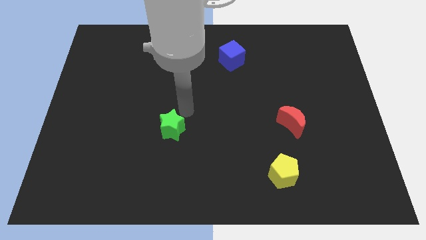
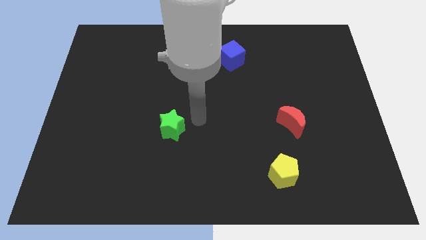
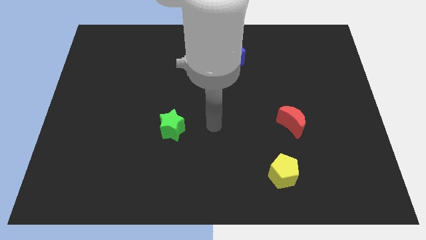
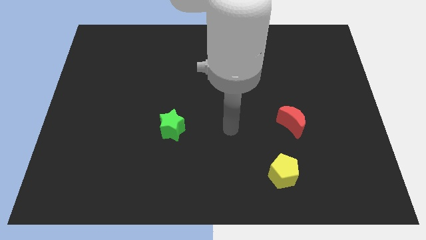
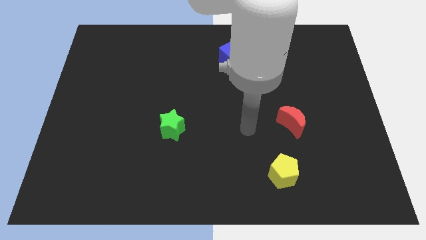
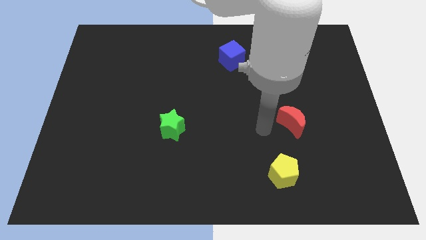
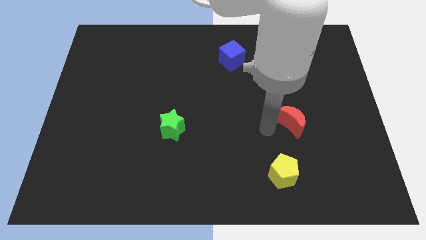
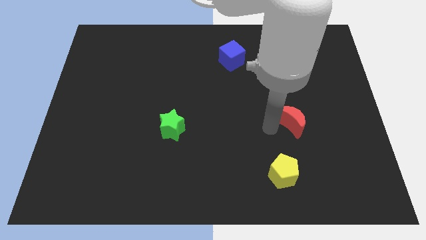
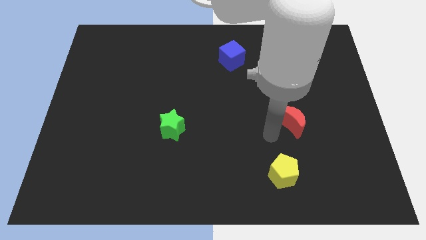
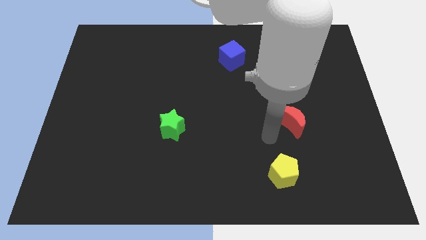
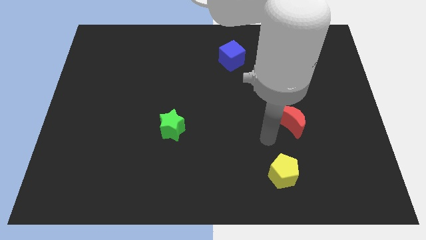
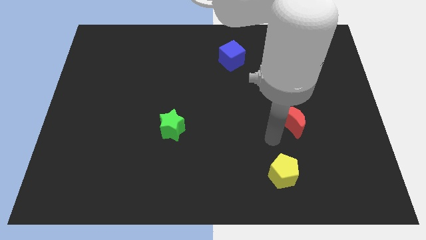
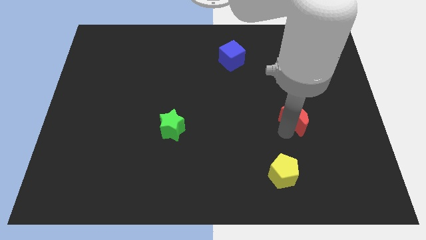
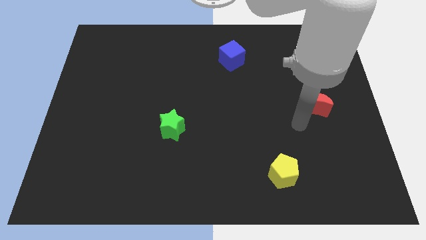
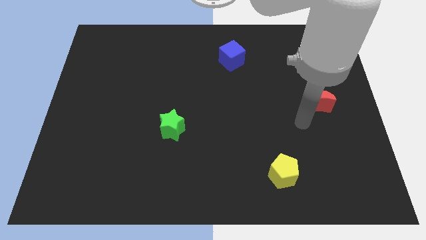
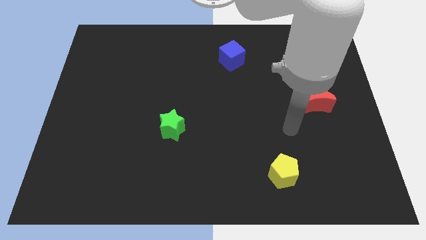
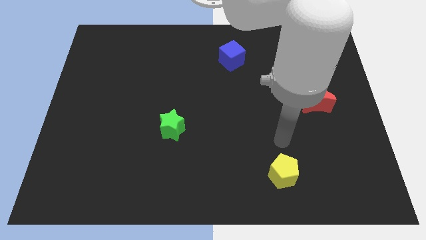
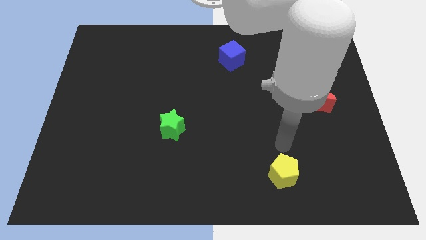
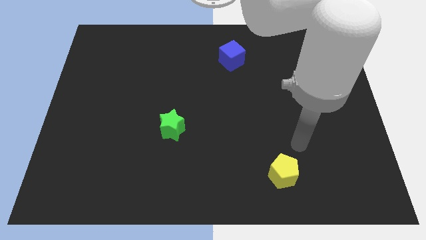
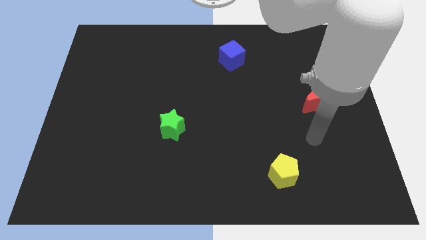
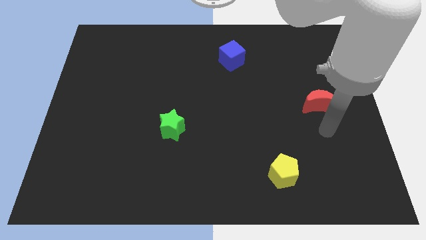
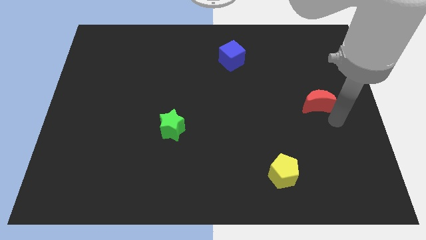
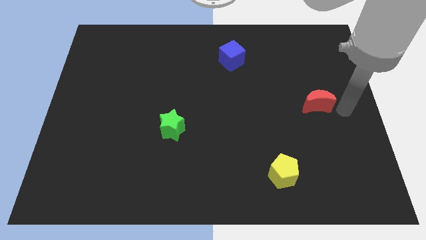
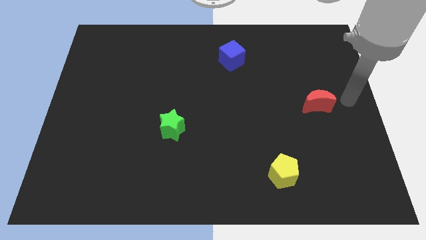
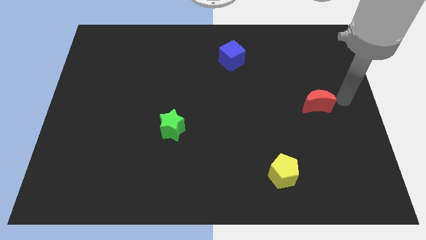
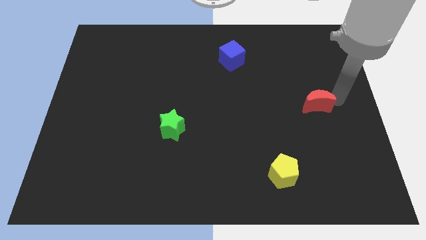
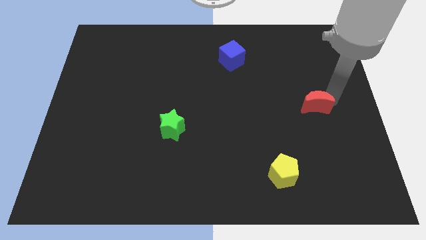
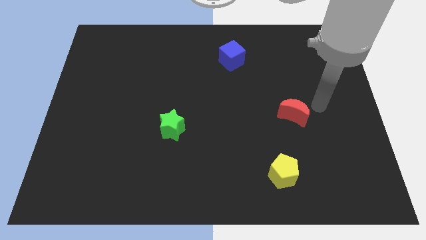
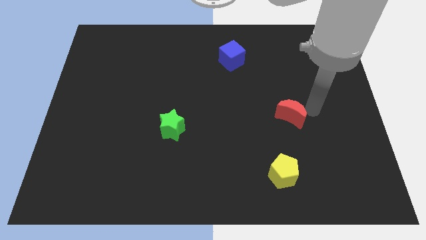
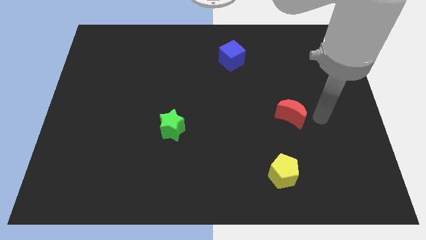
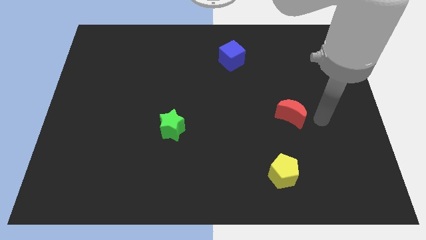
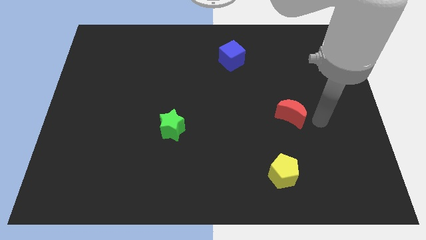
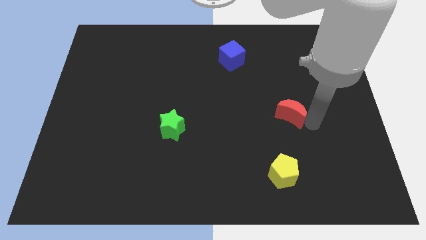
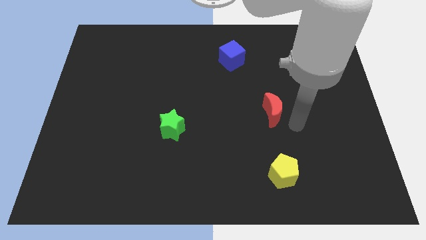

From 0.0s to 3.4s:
put the red crescent vertically above the yellow pentagon

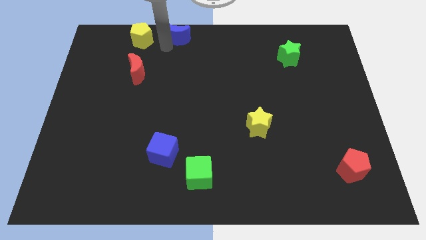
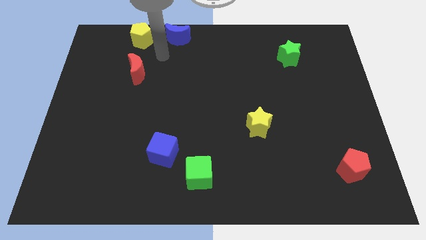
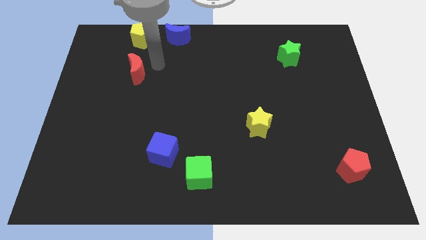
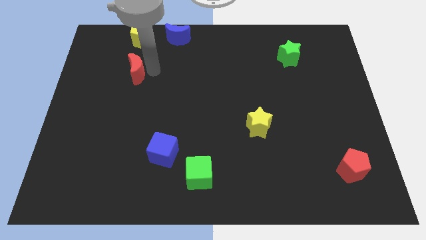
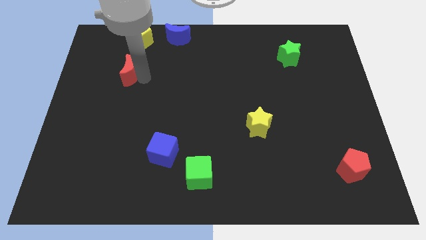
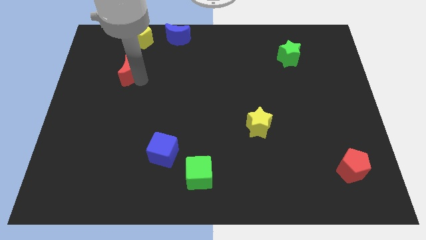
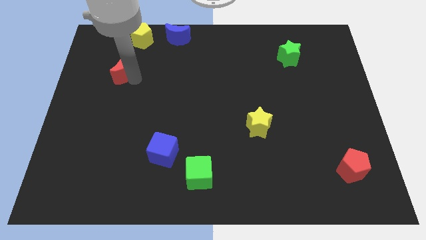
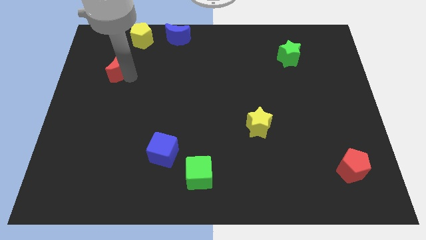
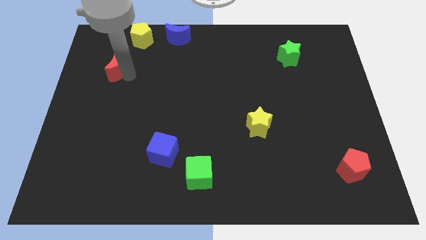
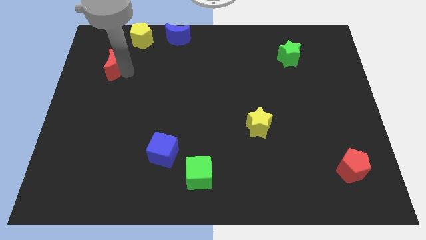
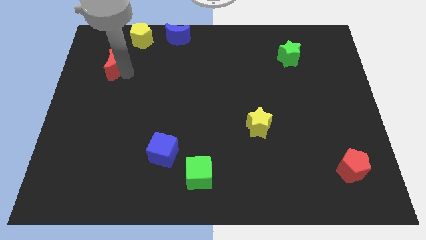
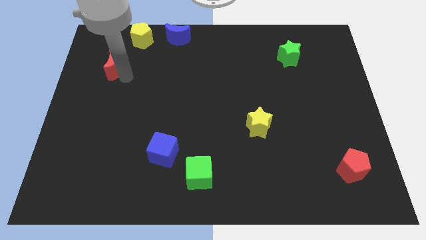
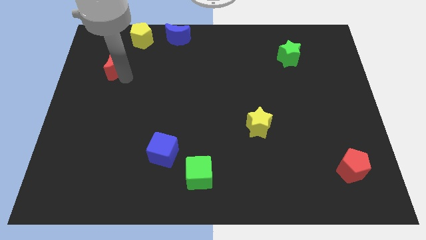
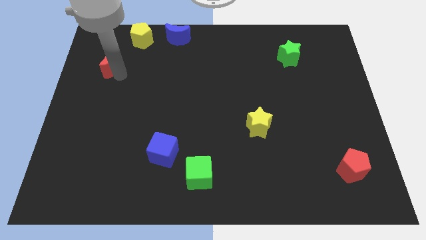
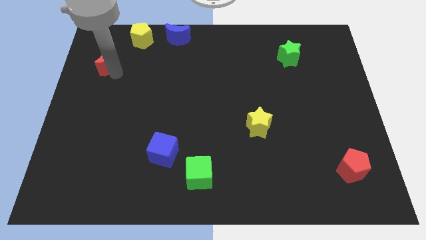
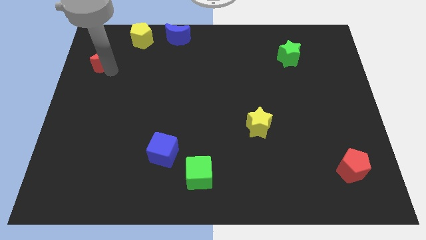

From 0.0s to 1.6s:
place red crescent left diagonally towards yellow pentgaon

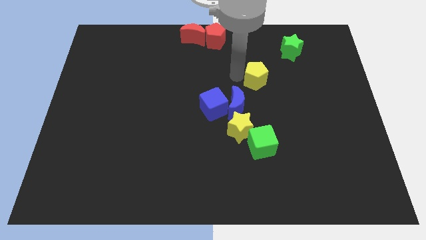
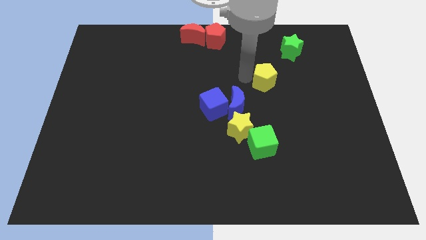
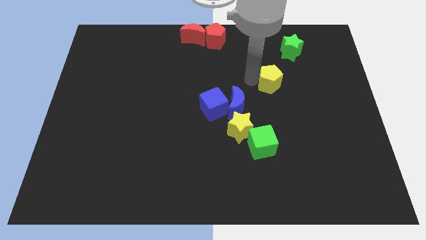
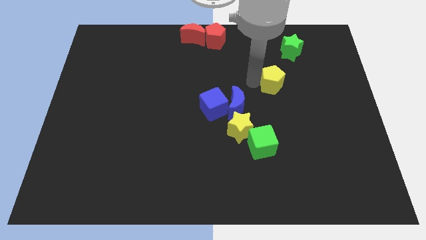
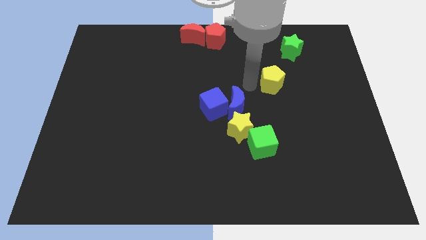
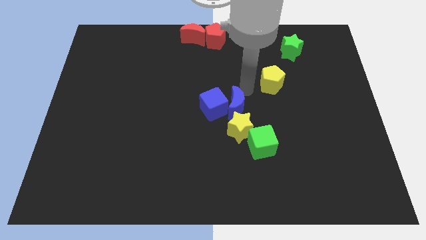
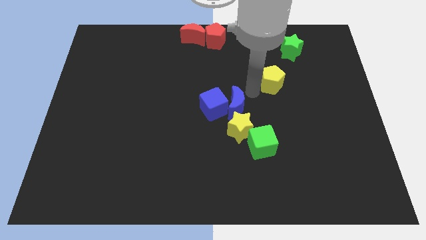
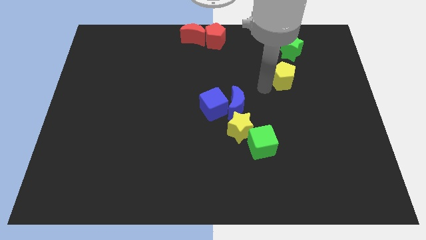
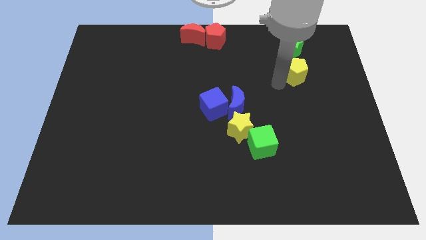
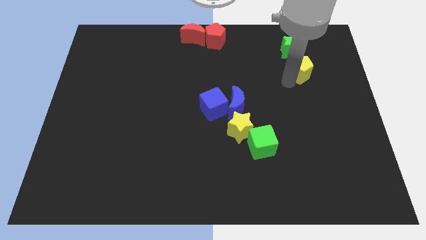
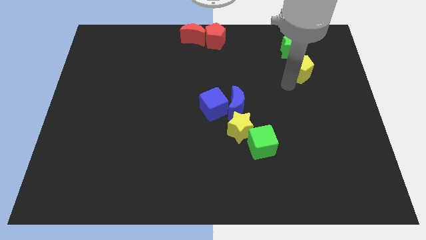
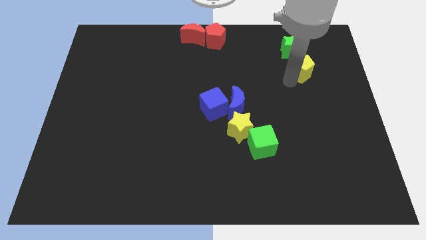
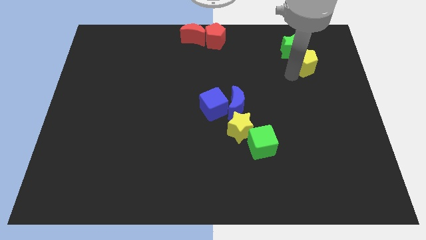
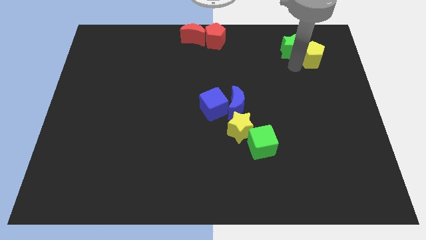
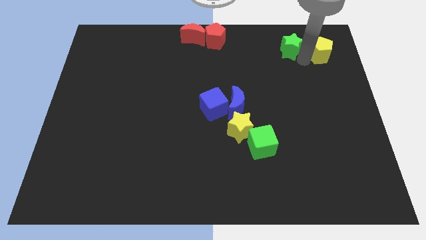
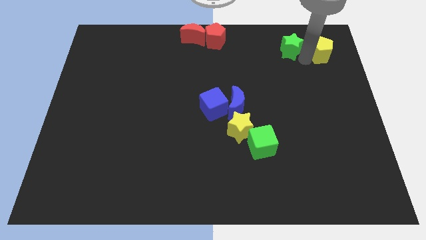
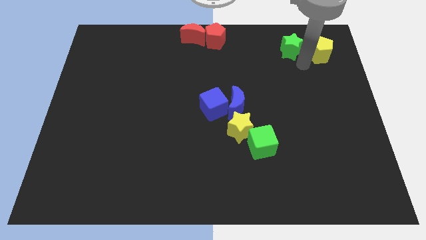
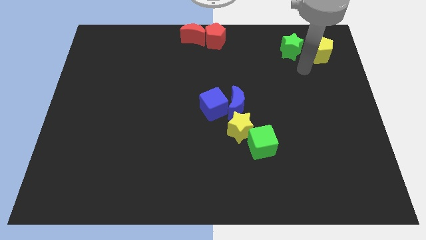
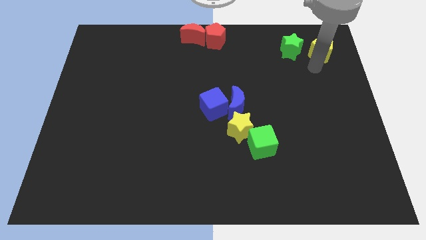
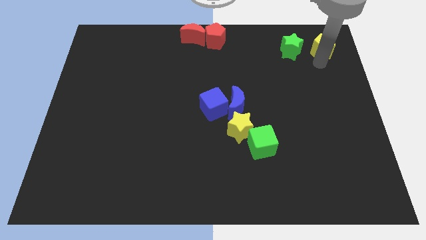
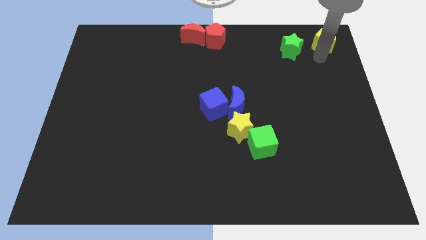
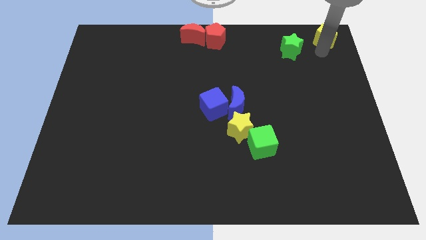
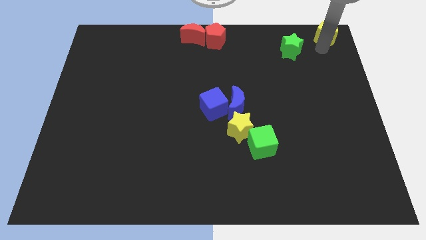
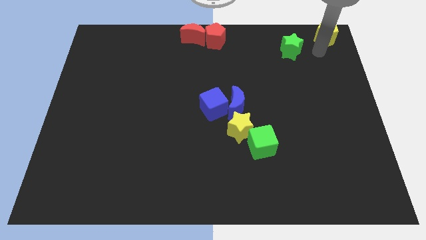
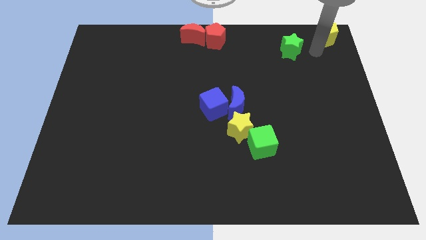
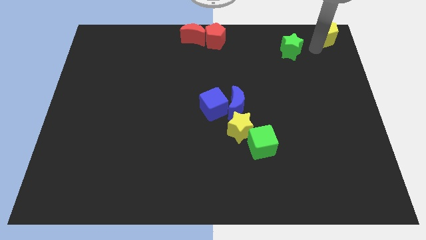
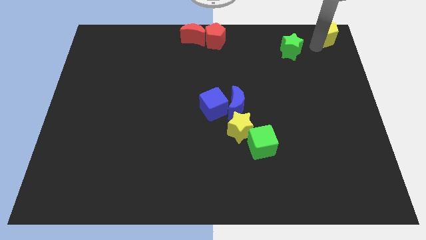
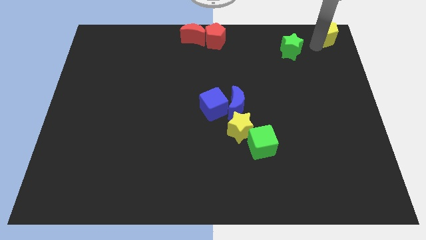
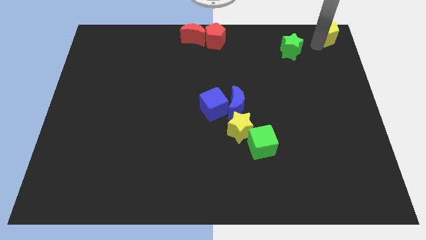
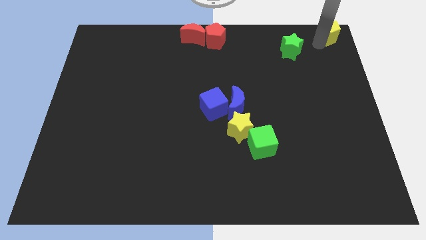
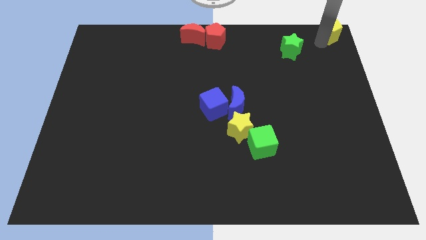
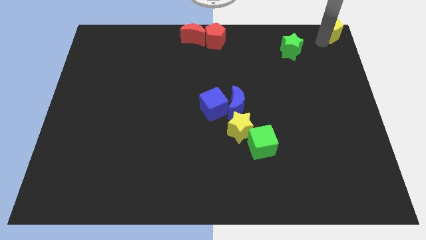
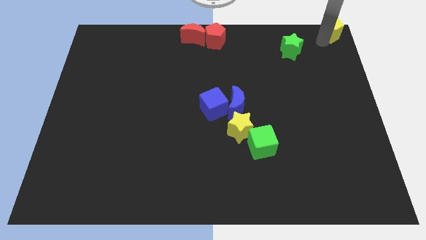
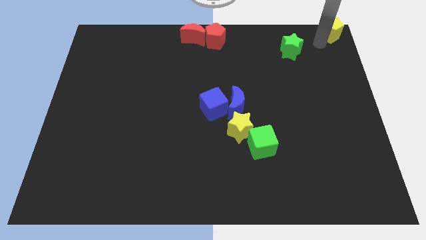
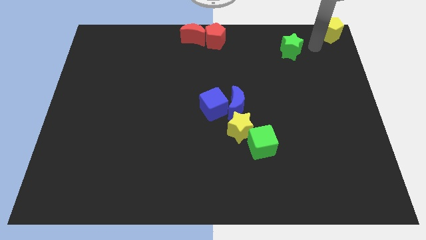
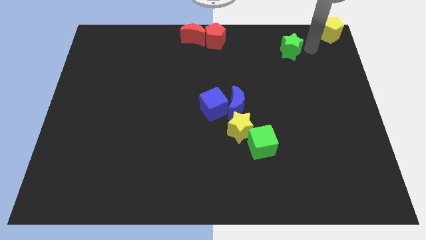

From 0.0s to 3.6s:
move the yellow pentagon to the top right corner

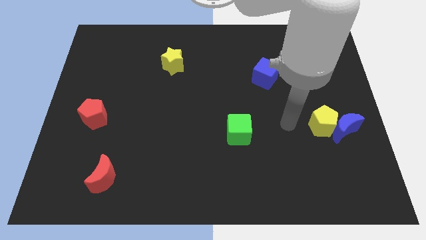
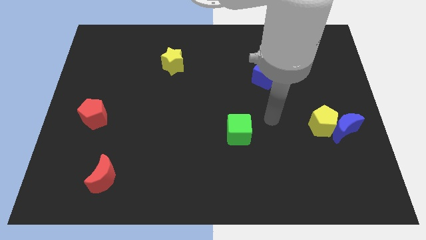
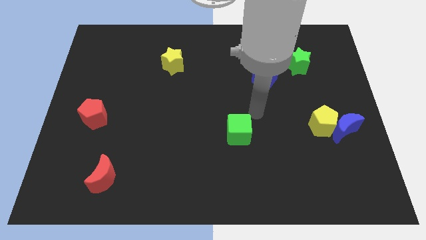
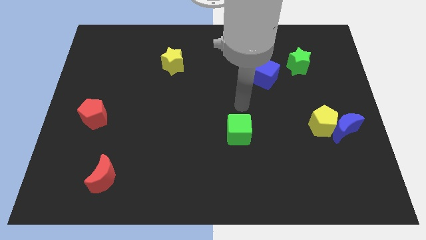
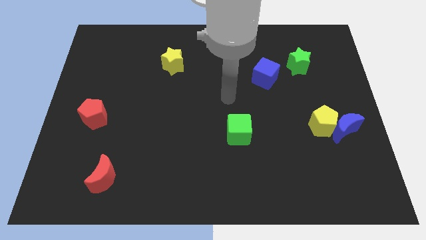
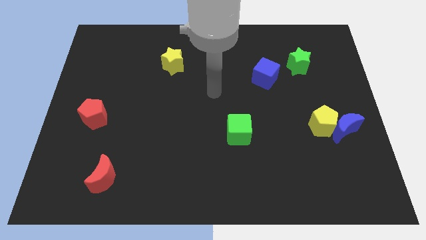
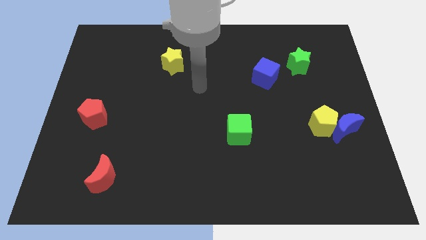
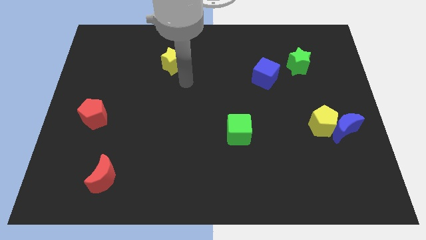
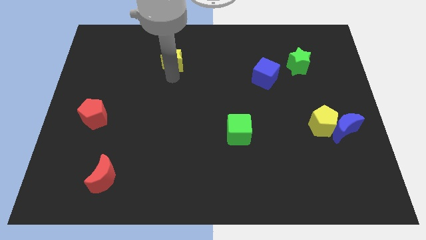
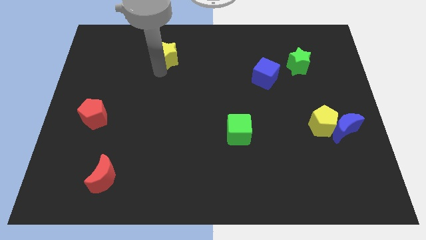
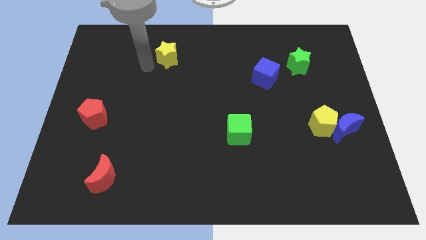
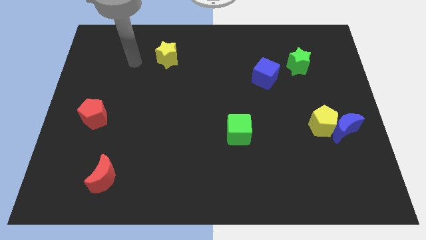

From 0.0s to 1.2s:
slightly touch your arm to yellow star
